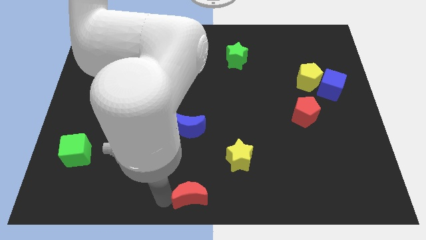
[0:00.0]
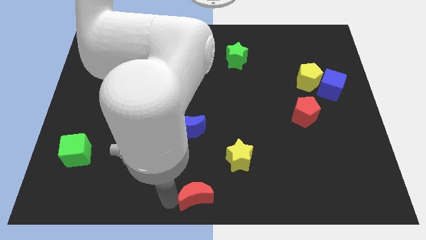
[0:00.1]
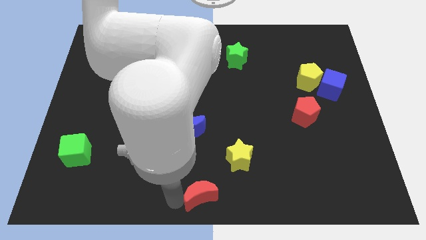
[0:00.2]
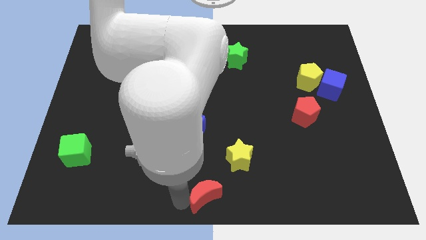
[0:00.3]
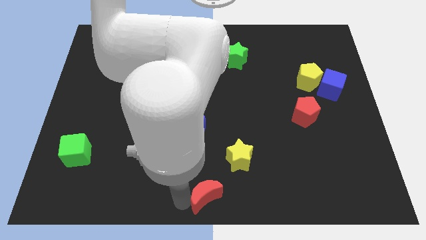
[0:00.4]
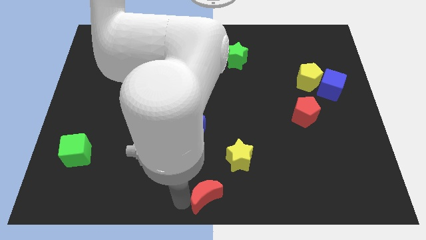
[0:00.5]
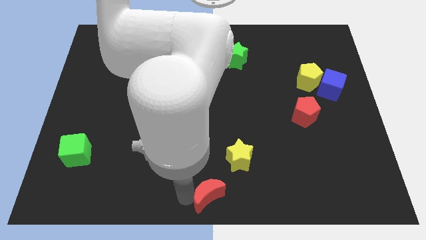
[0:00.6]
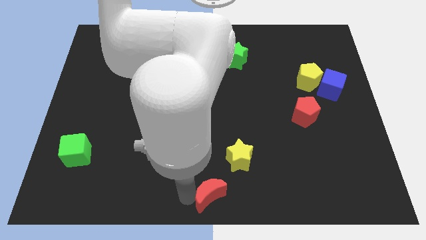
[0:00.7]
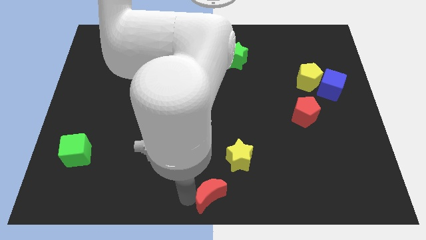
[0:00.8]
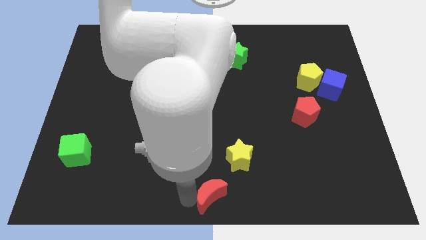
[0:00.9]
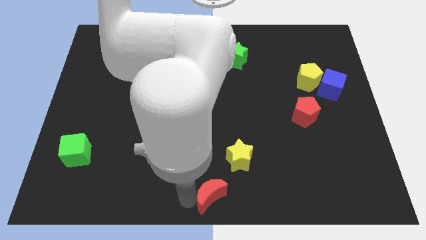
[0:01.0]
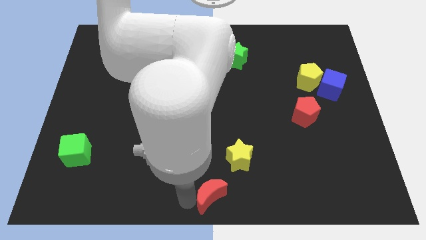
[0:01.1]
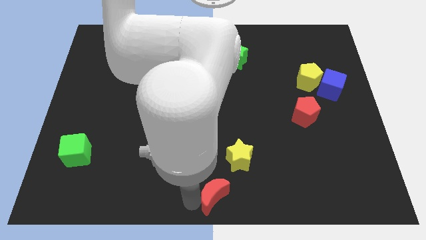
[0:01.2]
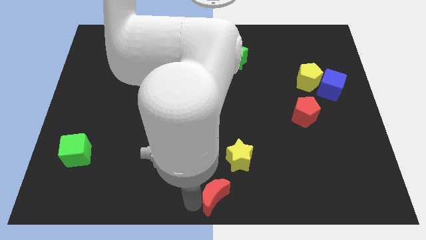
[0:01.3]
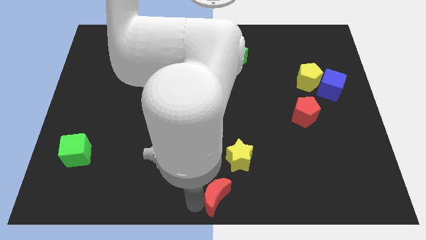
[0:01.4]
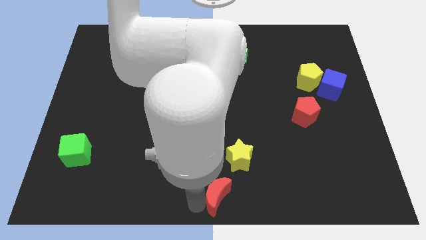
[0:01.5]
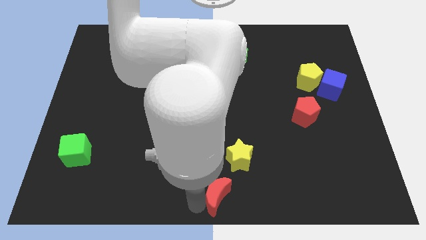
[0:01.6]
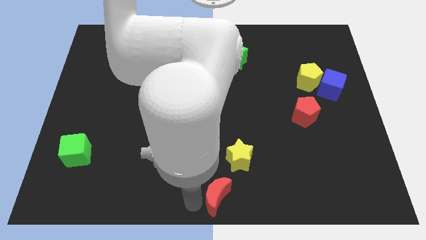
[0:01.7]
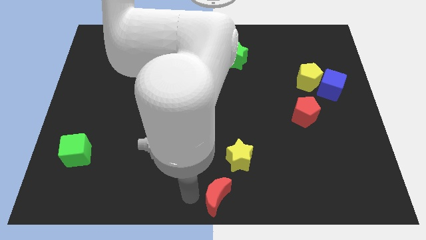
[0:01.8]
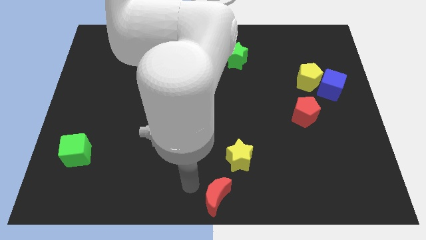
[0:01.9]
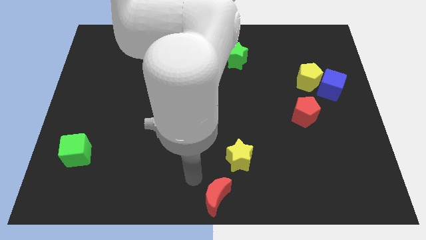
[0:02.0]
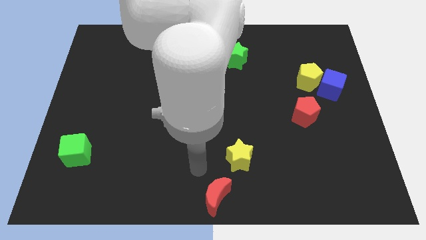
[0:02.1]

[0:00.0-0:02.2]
move the red crescent to the right of the board

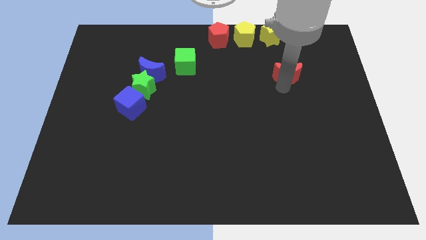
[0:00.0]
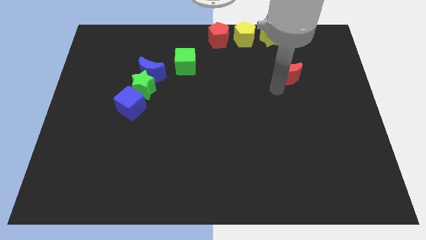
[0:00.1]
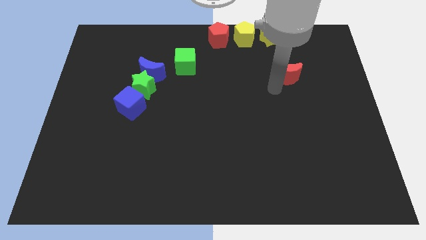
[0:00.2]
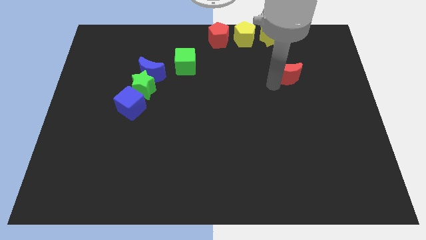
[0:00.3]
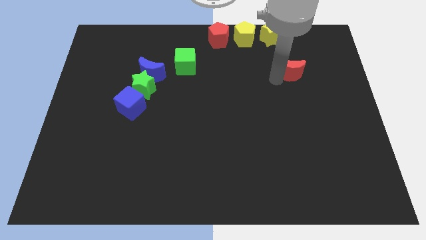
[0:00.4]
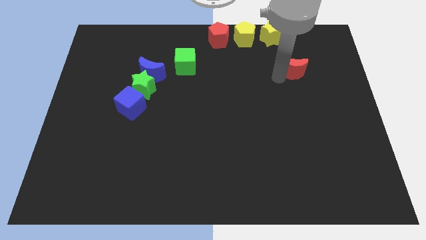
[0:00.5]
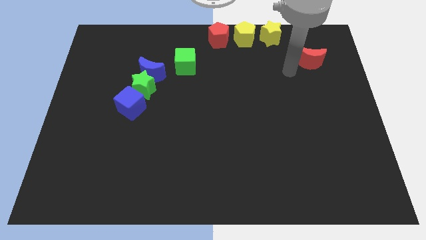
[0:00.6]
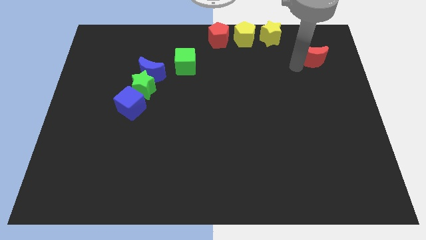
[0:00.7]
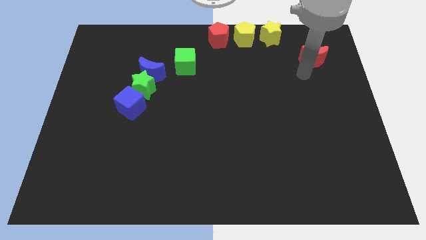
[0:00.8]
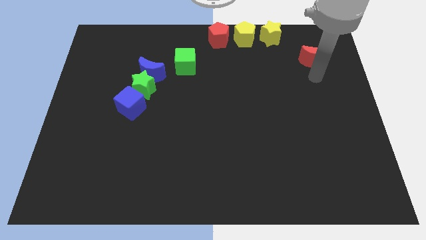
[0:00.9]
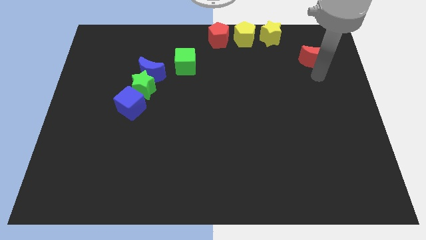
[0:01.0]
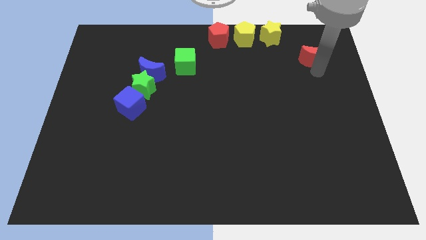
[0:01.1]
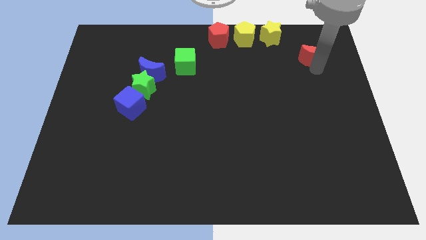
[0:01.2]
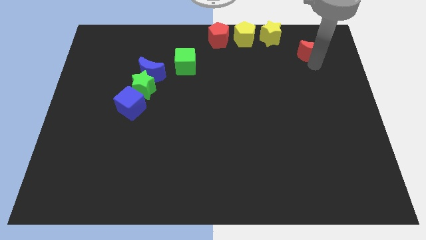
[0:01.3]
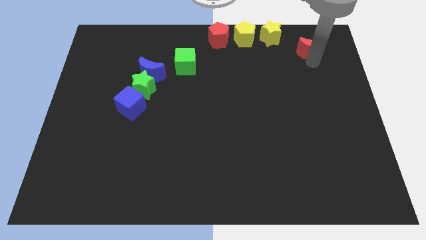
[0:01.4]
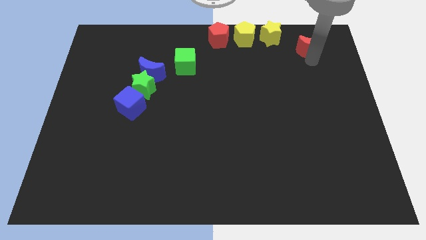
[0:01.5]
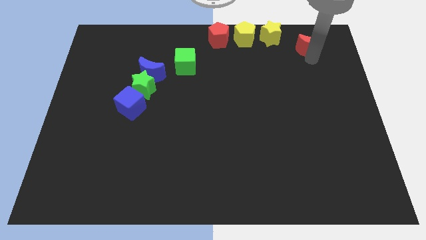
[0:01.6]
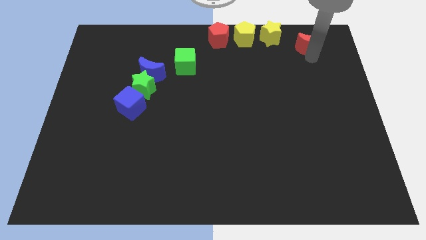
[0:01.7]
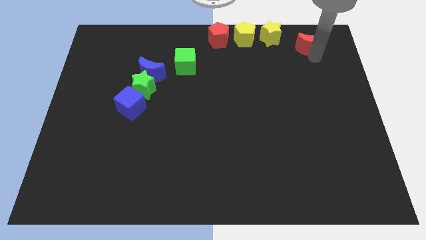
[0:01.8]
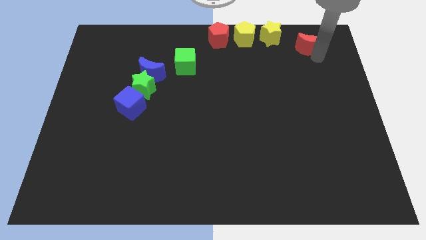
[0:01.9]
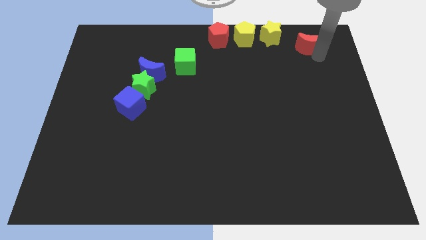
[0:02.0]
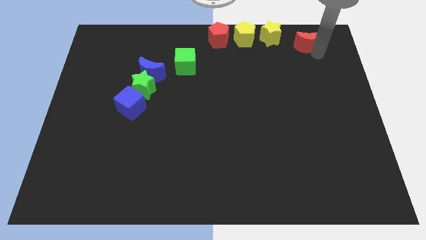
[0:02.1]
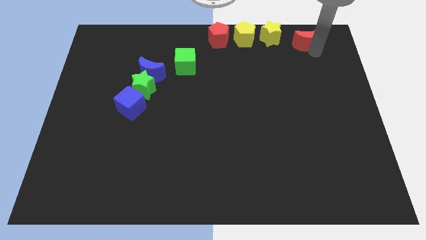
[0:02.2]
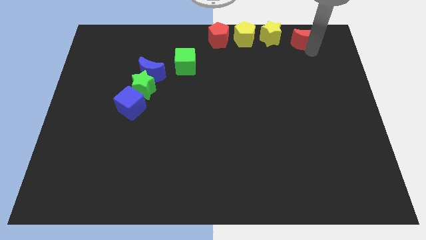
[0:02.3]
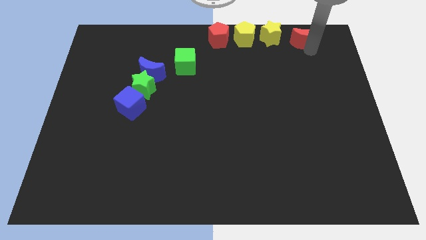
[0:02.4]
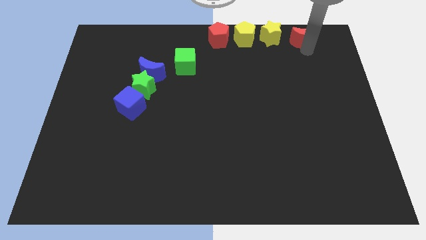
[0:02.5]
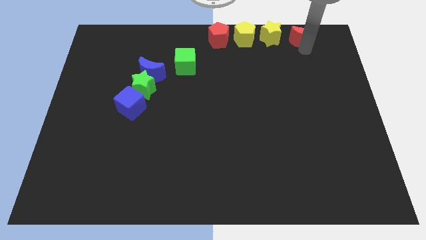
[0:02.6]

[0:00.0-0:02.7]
place the red crescent at right side of the yellow star

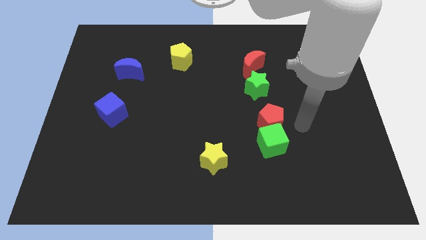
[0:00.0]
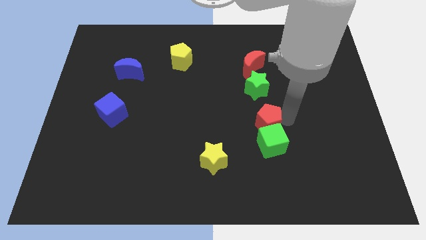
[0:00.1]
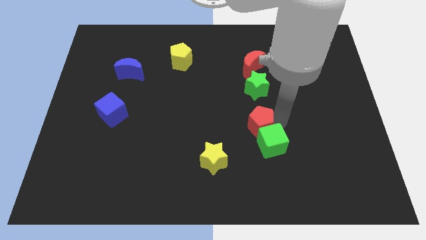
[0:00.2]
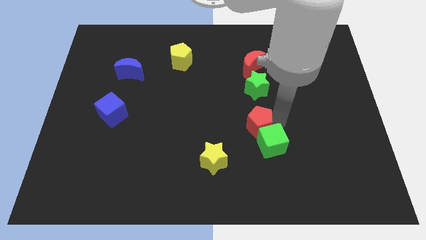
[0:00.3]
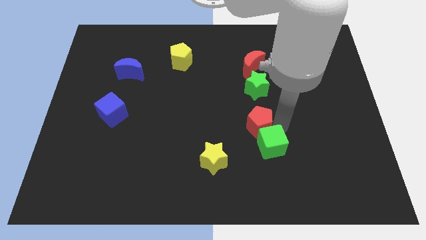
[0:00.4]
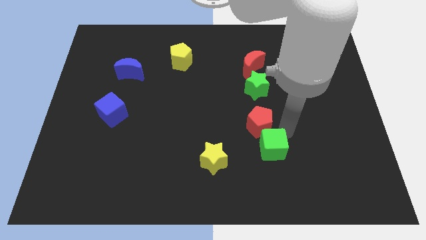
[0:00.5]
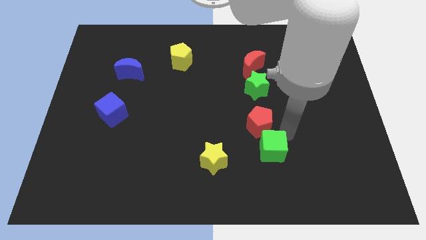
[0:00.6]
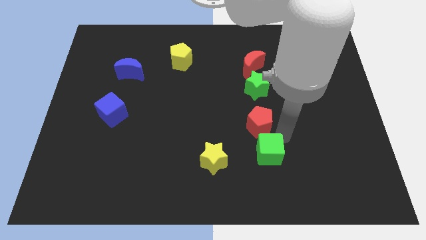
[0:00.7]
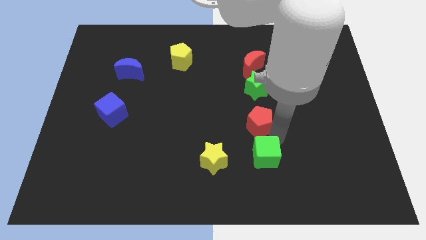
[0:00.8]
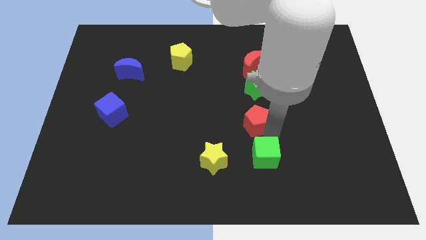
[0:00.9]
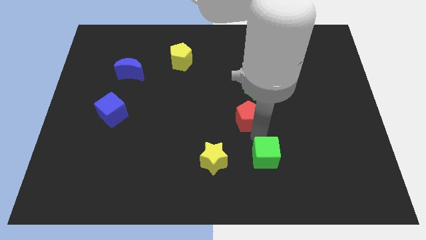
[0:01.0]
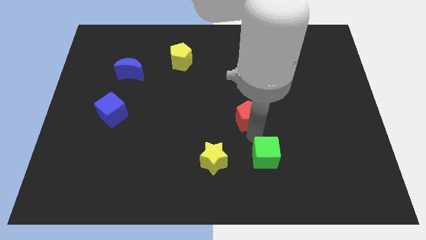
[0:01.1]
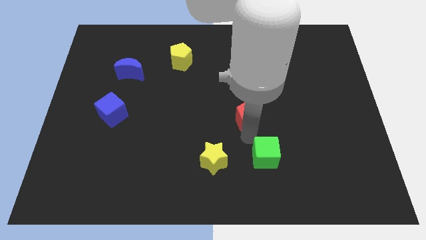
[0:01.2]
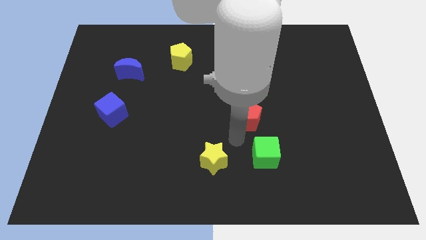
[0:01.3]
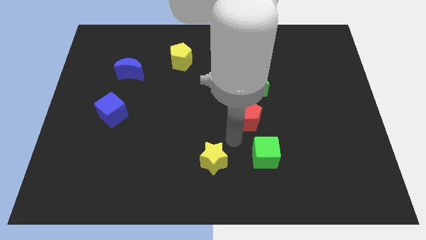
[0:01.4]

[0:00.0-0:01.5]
separate the red pentagon and the green cube

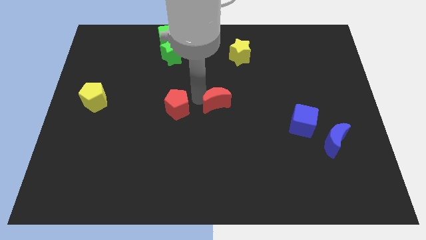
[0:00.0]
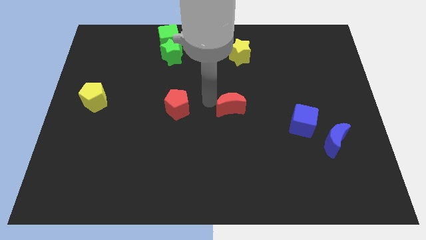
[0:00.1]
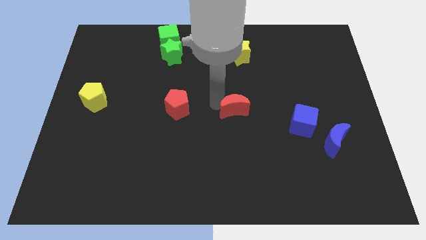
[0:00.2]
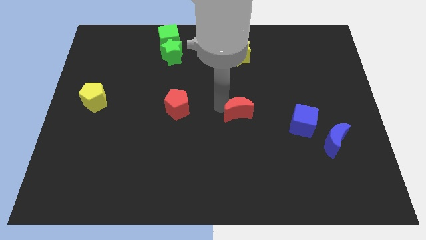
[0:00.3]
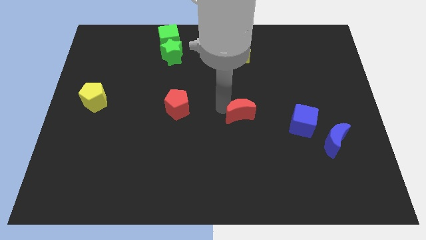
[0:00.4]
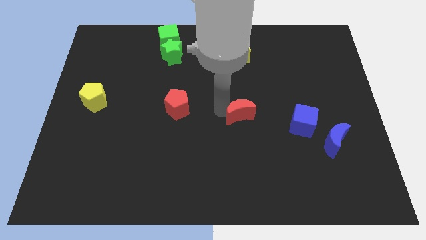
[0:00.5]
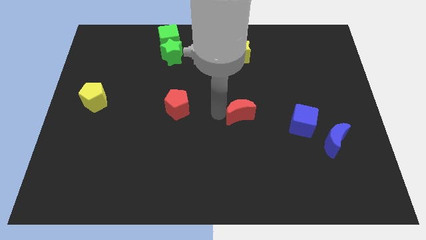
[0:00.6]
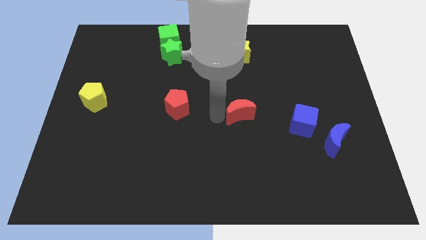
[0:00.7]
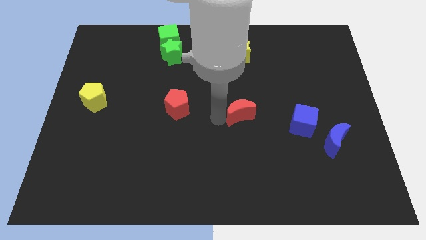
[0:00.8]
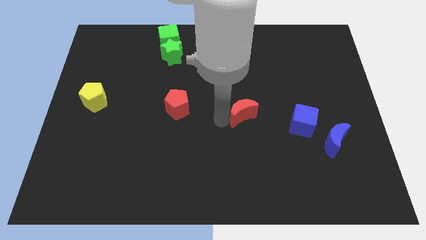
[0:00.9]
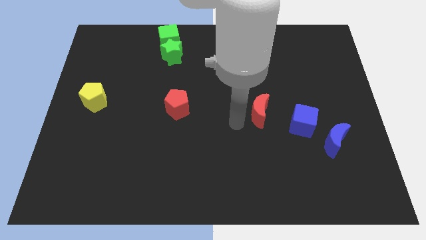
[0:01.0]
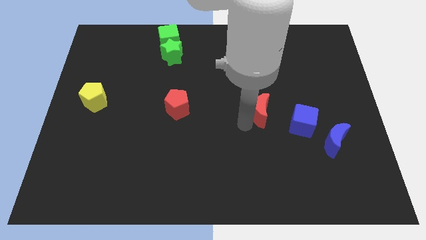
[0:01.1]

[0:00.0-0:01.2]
slide the red moon diagonally to the blue cube

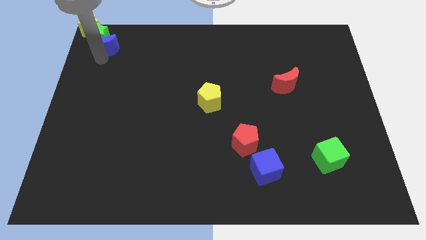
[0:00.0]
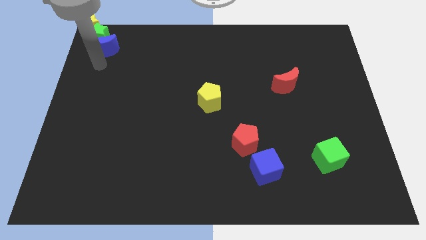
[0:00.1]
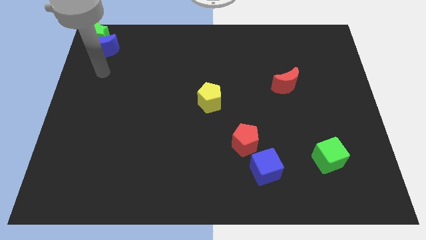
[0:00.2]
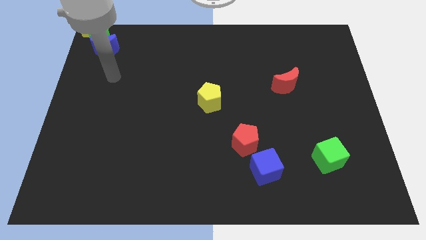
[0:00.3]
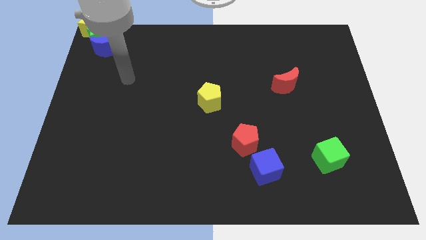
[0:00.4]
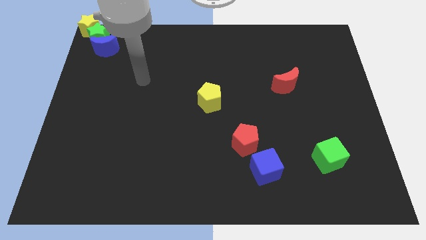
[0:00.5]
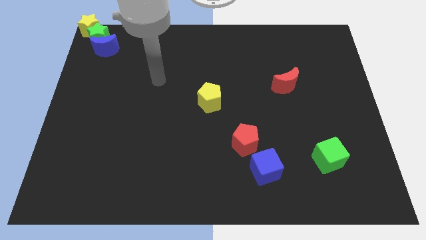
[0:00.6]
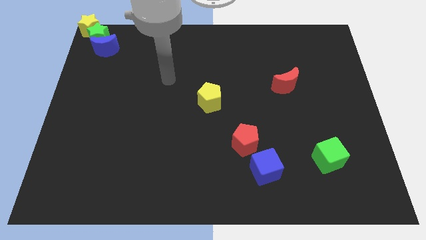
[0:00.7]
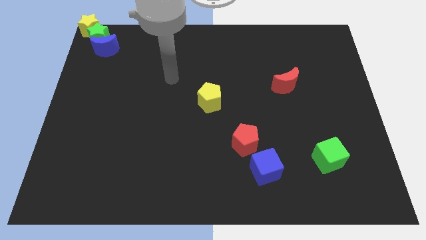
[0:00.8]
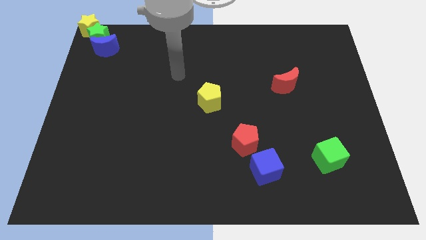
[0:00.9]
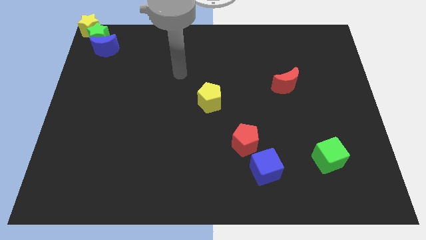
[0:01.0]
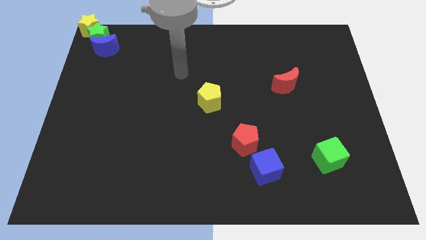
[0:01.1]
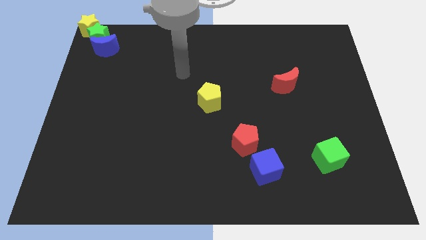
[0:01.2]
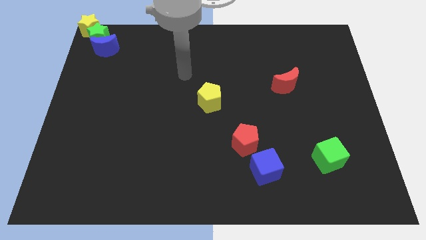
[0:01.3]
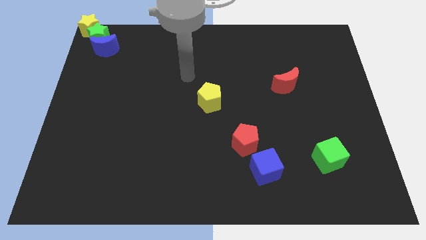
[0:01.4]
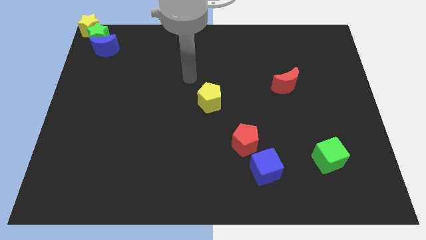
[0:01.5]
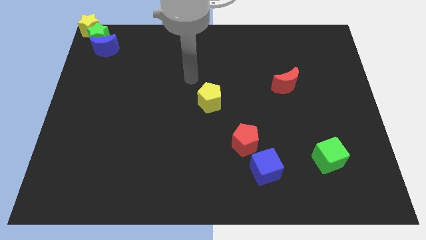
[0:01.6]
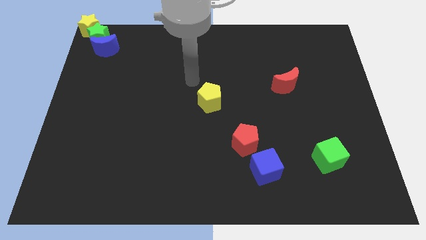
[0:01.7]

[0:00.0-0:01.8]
move your hand towards the top left side of the yellow pentagon
